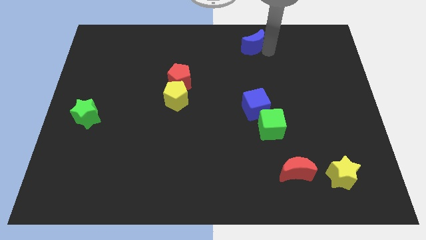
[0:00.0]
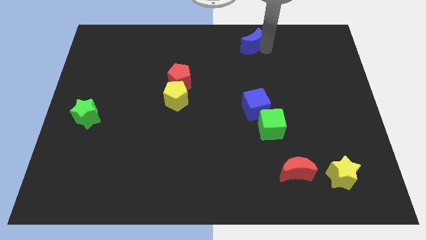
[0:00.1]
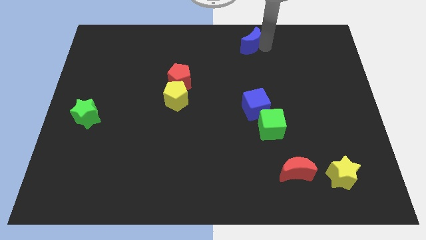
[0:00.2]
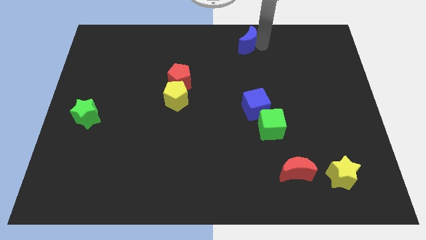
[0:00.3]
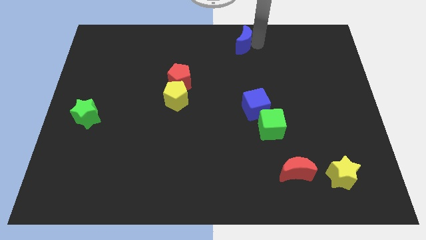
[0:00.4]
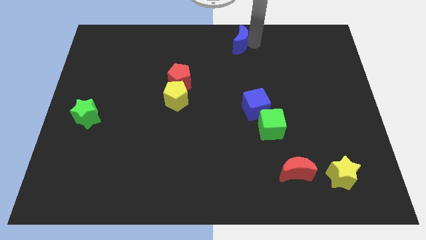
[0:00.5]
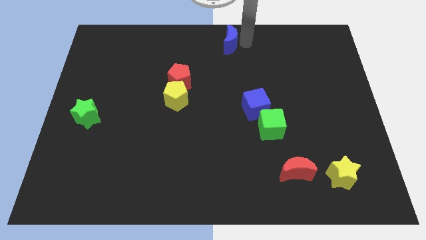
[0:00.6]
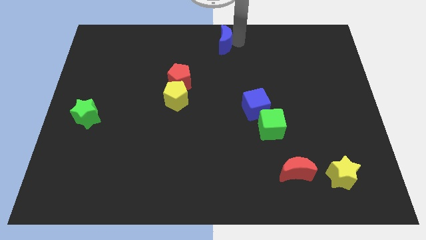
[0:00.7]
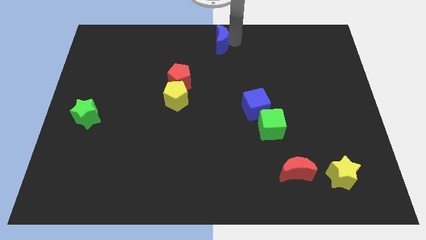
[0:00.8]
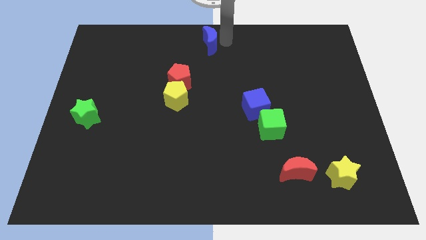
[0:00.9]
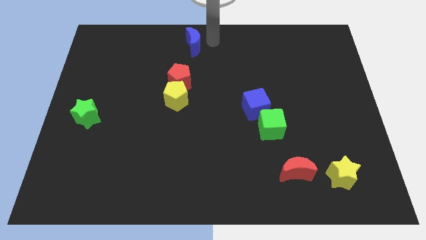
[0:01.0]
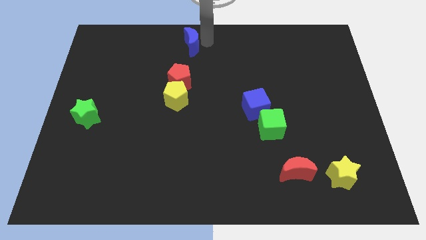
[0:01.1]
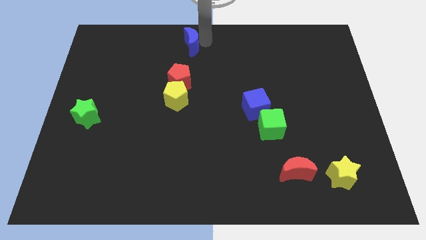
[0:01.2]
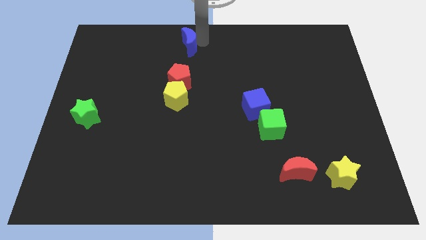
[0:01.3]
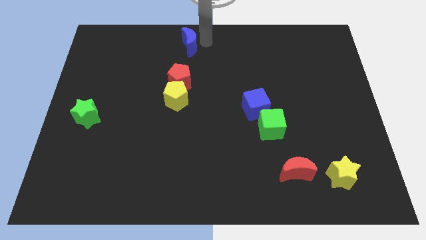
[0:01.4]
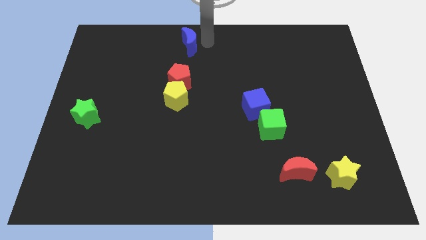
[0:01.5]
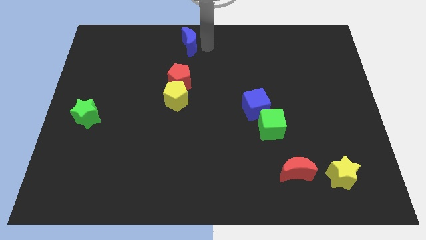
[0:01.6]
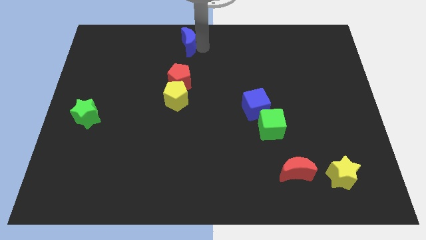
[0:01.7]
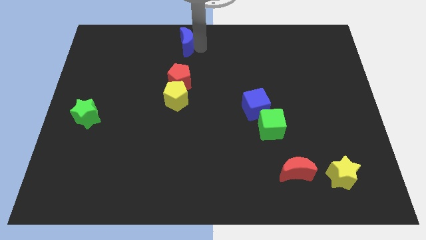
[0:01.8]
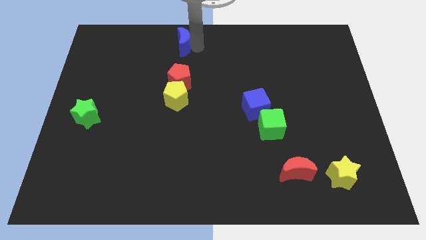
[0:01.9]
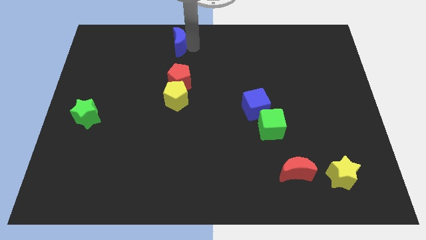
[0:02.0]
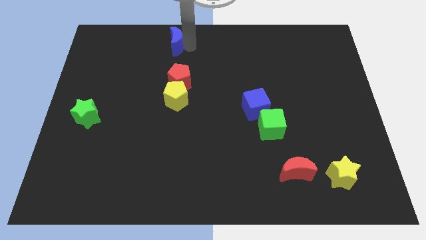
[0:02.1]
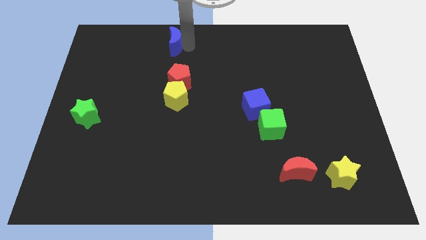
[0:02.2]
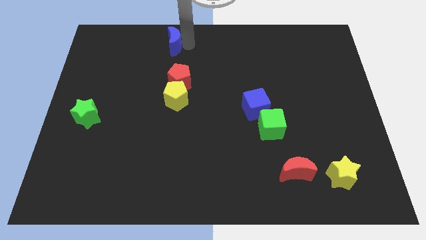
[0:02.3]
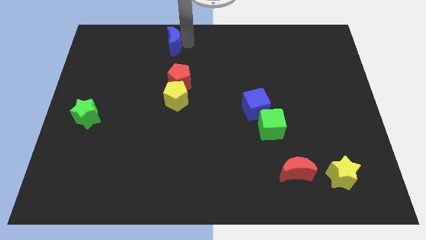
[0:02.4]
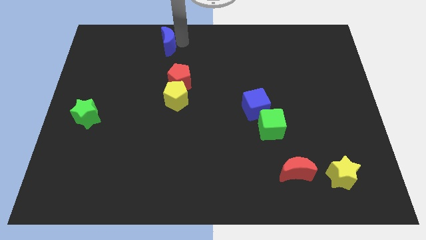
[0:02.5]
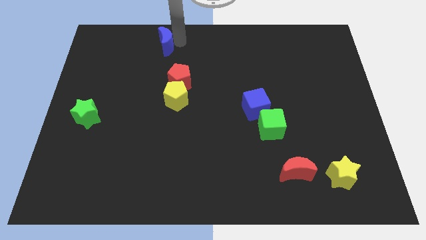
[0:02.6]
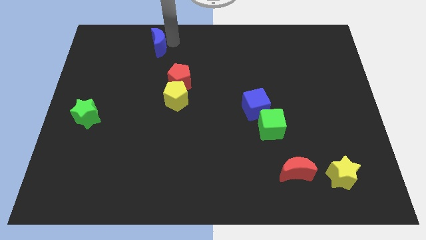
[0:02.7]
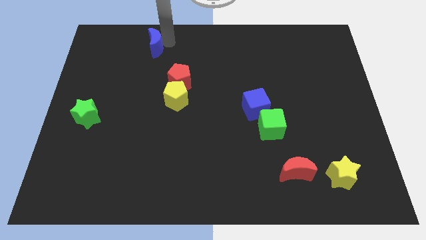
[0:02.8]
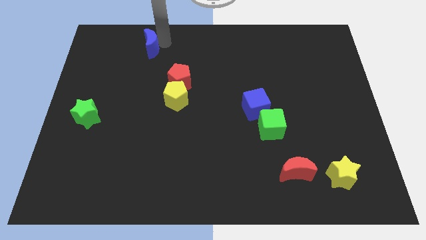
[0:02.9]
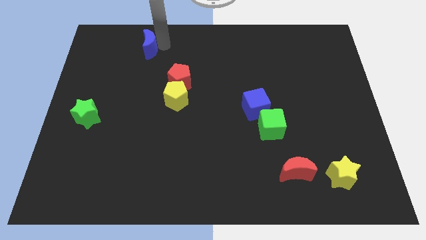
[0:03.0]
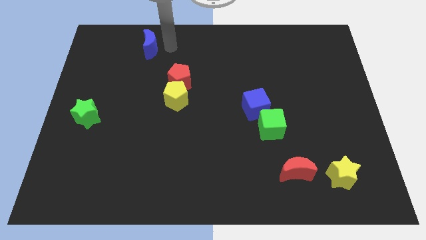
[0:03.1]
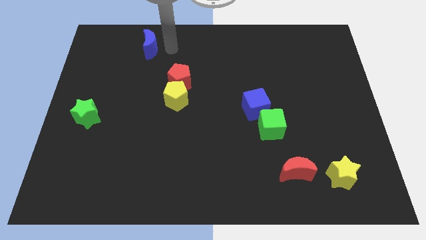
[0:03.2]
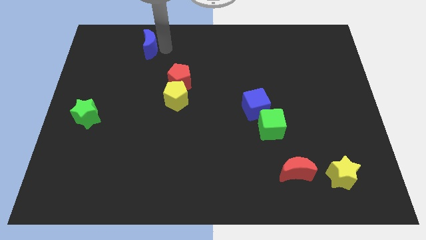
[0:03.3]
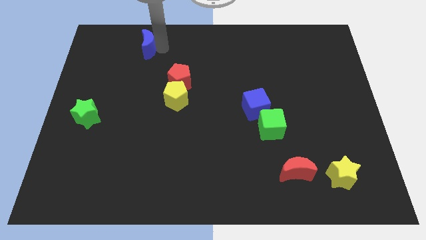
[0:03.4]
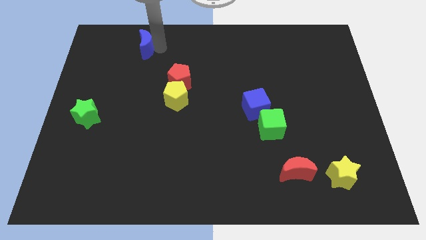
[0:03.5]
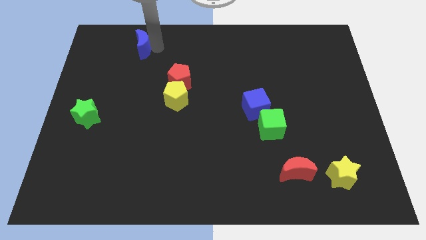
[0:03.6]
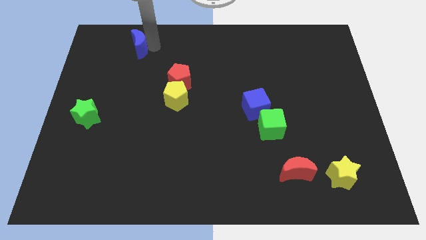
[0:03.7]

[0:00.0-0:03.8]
move the blue crescent diagonally top left to the red and yellow pentagon

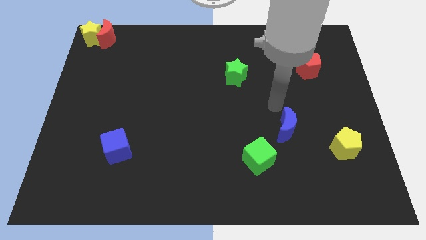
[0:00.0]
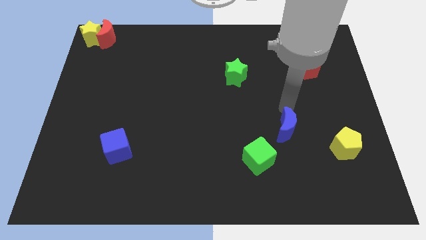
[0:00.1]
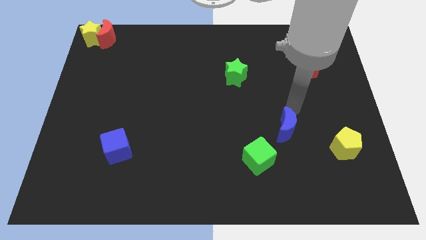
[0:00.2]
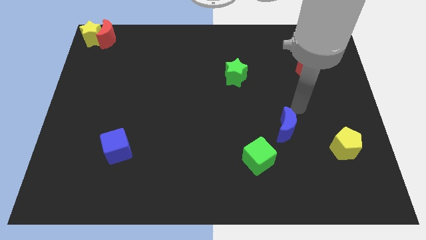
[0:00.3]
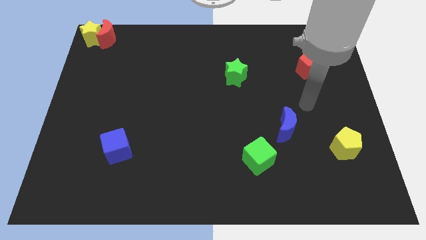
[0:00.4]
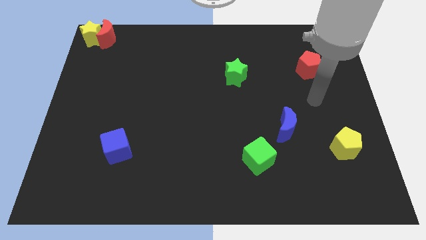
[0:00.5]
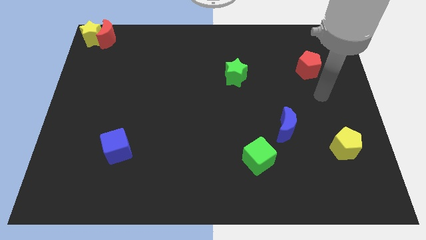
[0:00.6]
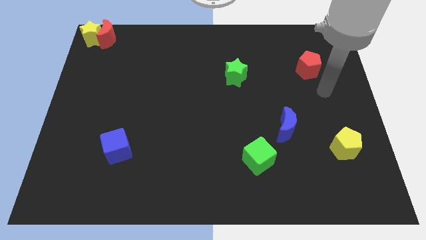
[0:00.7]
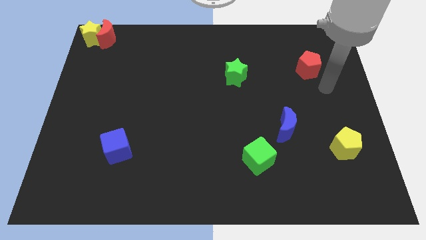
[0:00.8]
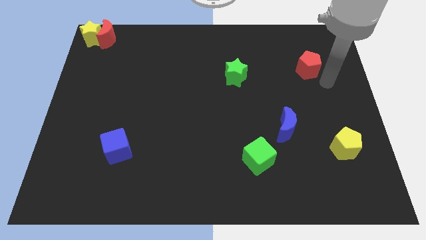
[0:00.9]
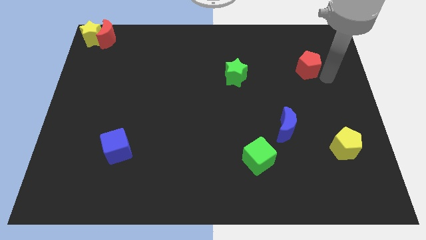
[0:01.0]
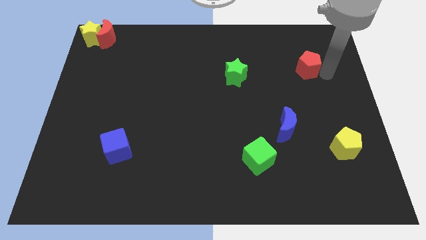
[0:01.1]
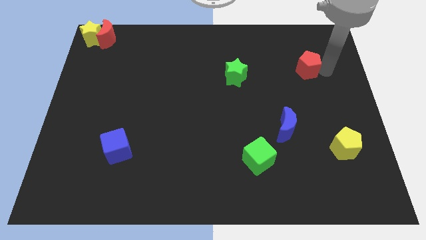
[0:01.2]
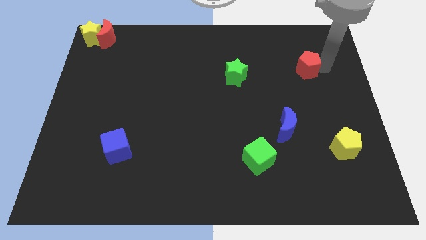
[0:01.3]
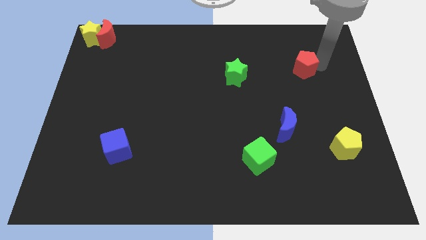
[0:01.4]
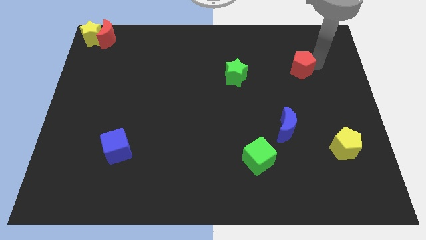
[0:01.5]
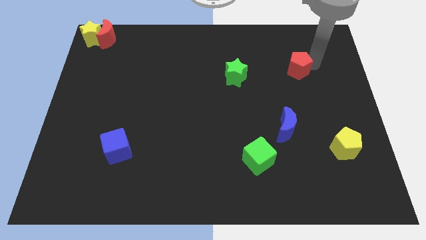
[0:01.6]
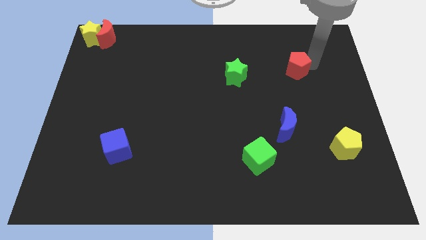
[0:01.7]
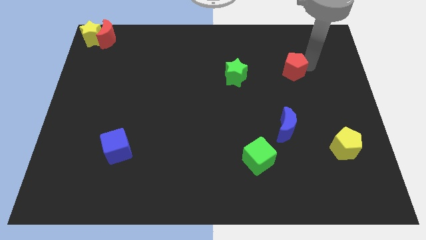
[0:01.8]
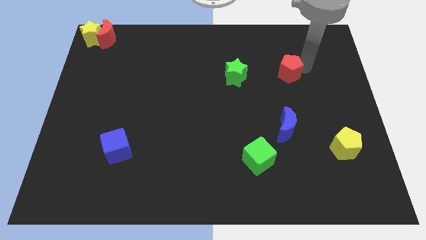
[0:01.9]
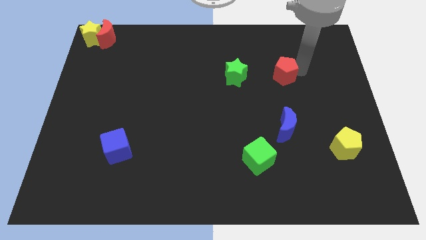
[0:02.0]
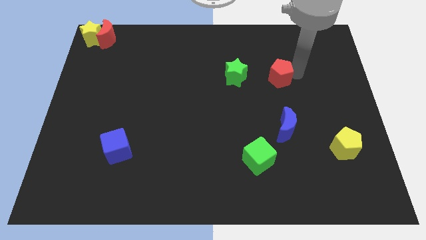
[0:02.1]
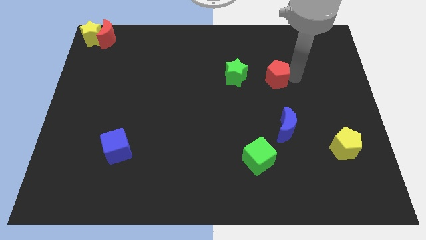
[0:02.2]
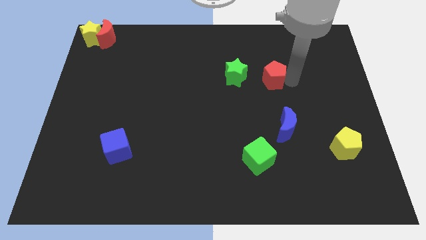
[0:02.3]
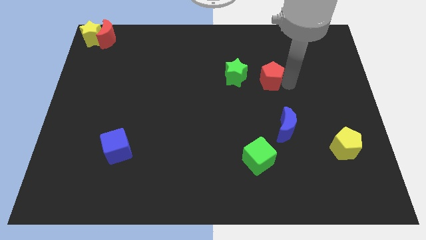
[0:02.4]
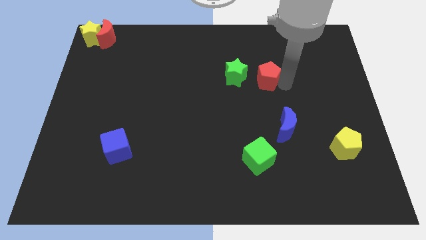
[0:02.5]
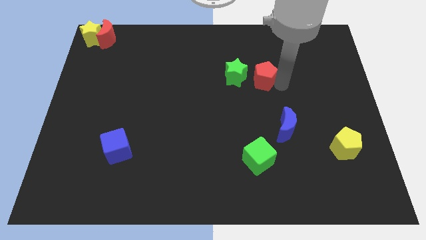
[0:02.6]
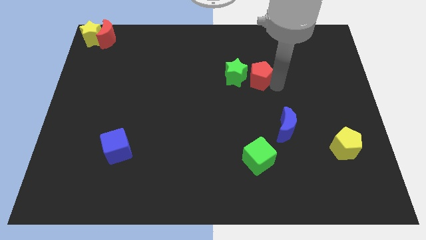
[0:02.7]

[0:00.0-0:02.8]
push the red pentagon to the right side of green star

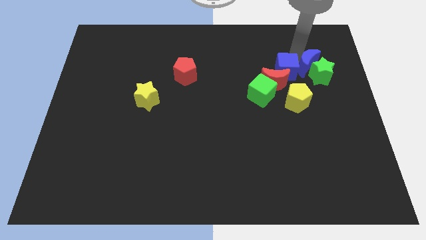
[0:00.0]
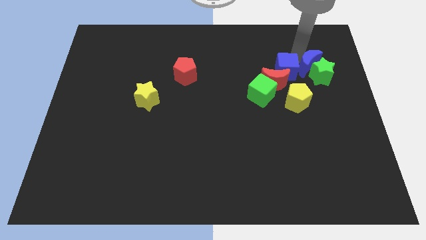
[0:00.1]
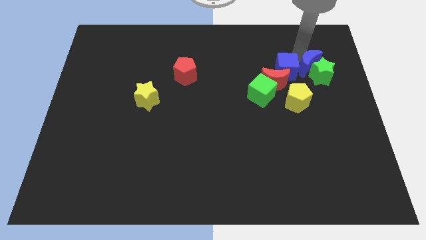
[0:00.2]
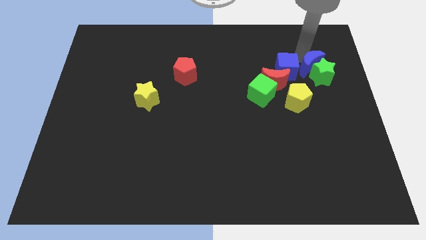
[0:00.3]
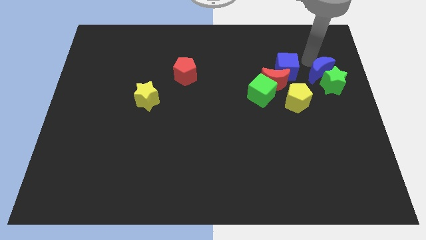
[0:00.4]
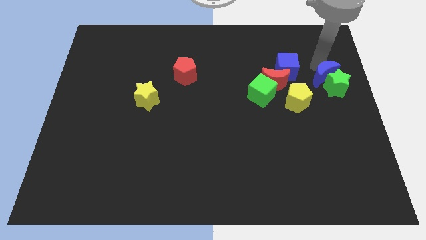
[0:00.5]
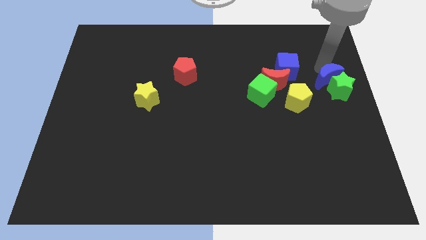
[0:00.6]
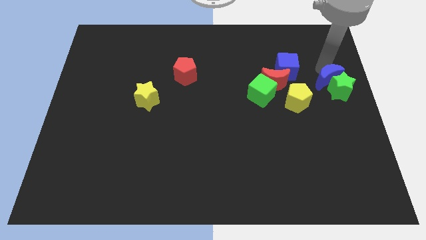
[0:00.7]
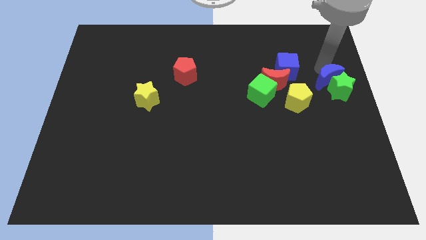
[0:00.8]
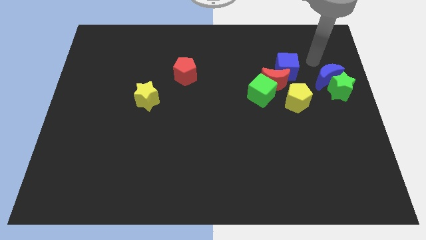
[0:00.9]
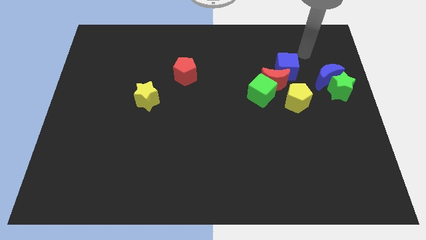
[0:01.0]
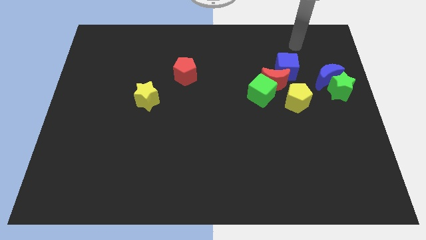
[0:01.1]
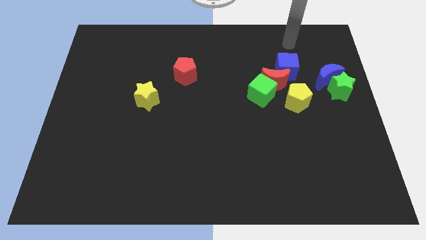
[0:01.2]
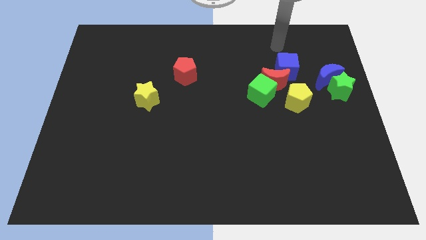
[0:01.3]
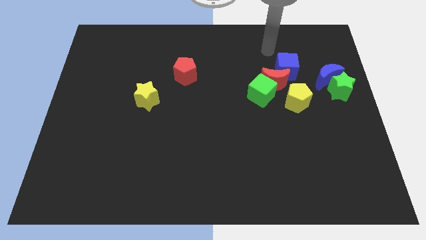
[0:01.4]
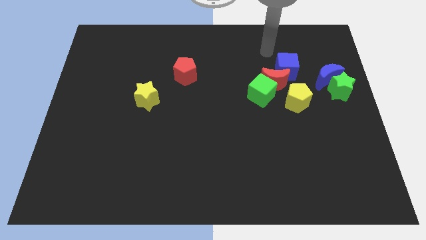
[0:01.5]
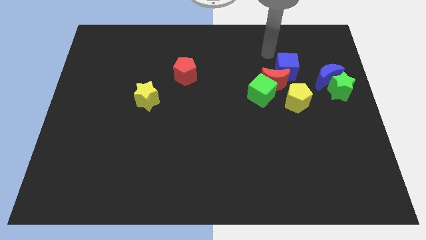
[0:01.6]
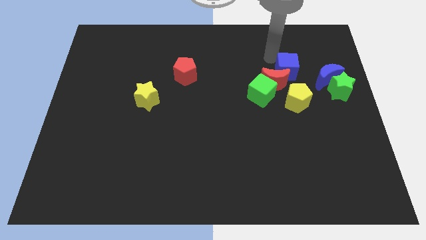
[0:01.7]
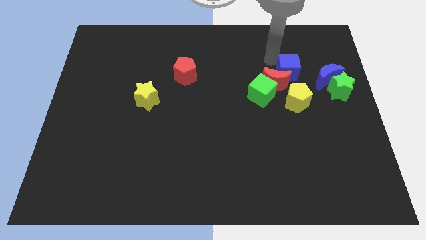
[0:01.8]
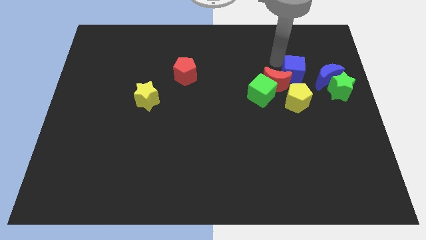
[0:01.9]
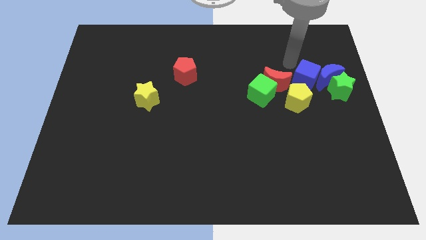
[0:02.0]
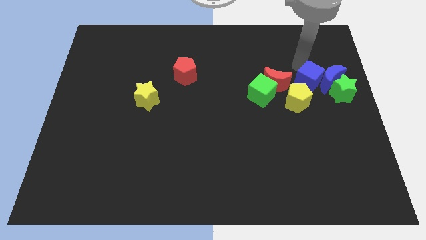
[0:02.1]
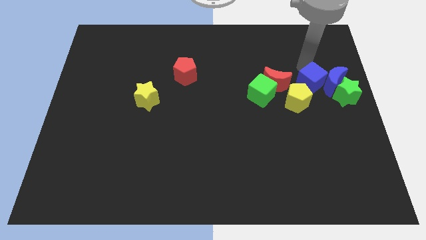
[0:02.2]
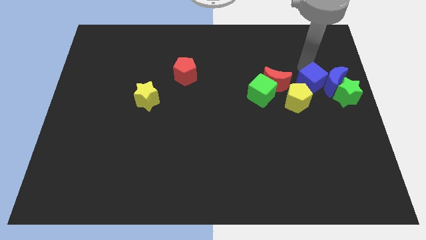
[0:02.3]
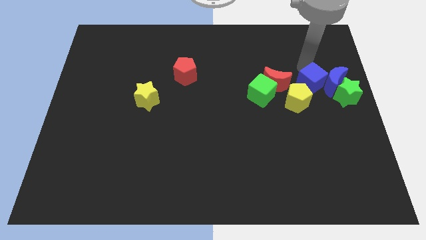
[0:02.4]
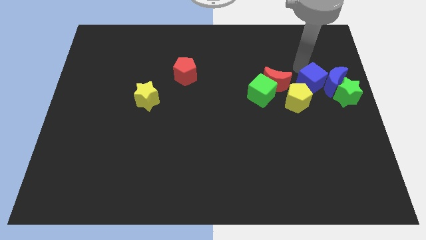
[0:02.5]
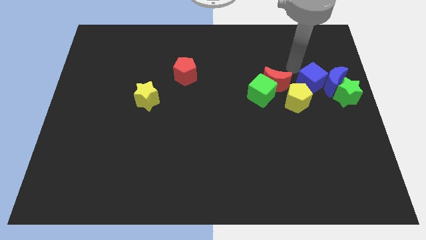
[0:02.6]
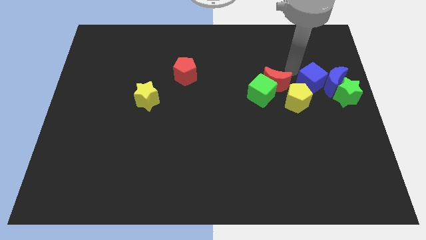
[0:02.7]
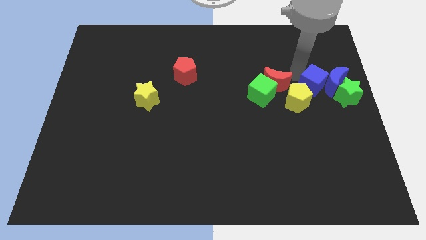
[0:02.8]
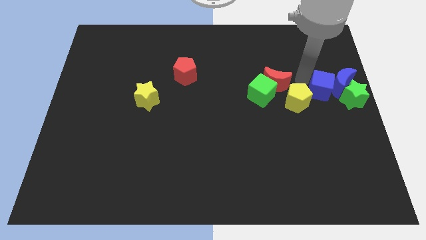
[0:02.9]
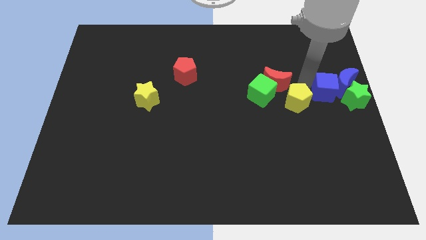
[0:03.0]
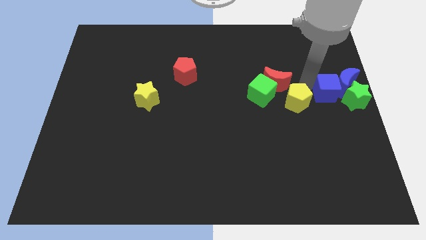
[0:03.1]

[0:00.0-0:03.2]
push the blue crescent into the green star
